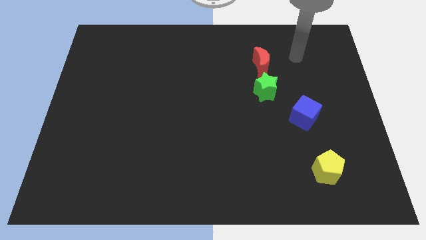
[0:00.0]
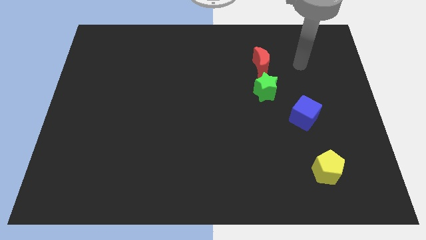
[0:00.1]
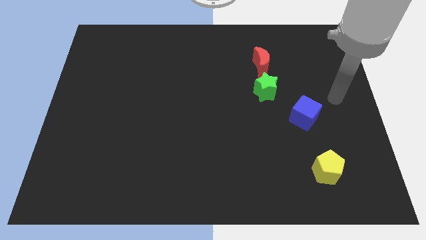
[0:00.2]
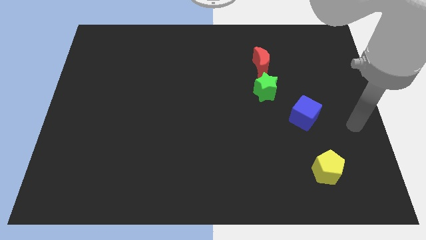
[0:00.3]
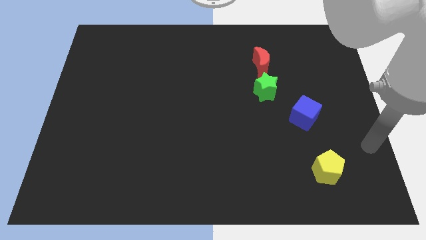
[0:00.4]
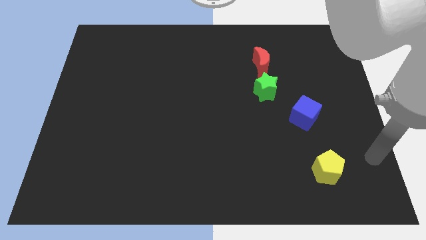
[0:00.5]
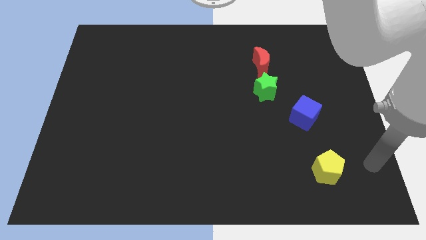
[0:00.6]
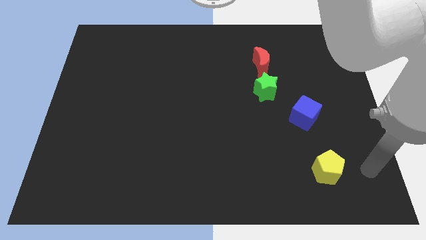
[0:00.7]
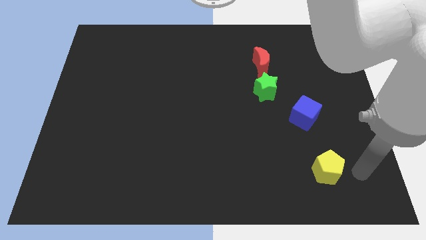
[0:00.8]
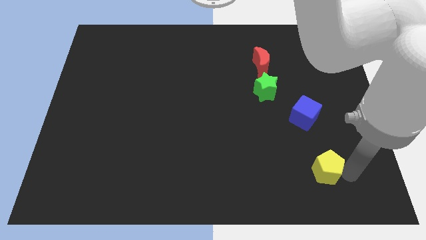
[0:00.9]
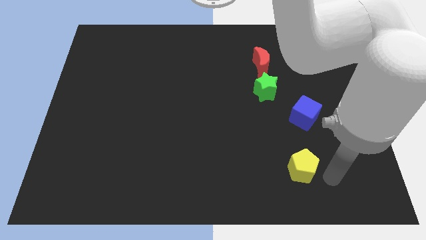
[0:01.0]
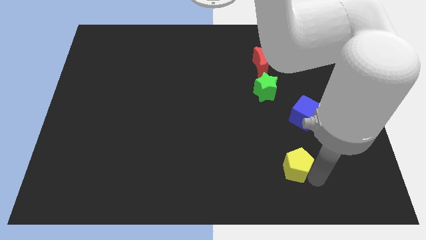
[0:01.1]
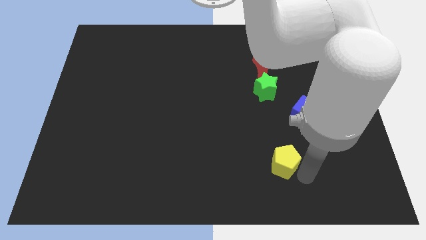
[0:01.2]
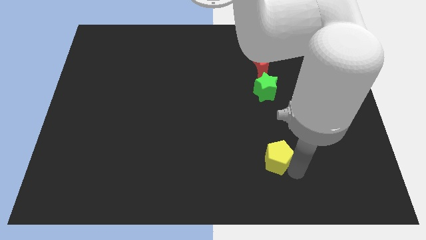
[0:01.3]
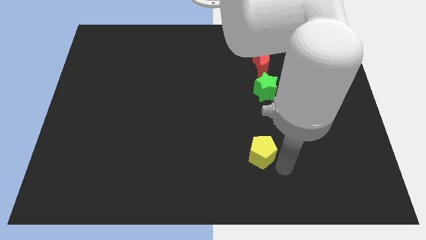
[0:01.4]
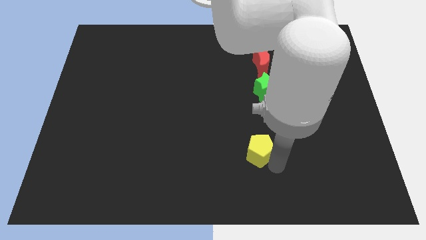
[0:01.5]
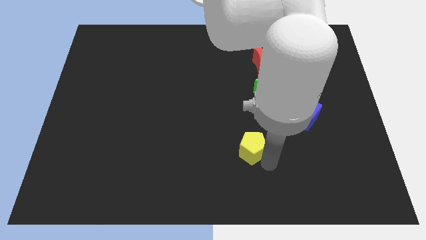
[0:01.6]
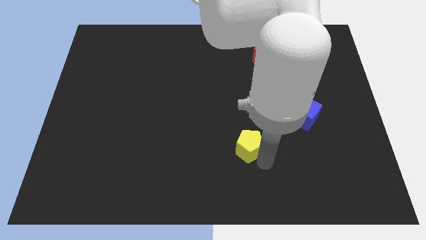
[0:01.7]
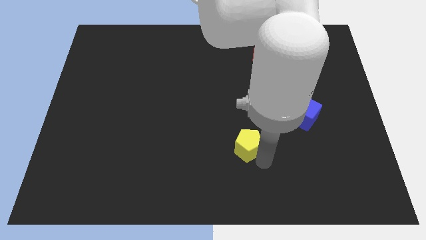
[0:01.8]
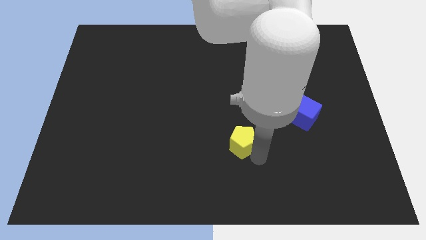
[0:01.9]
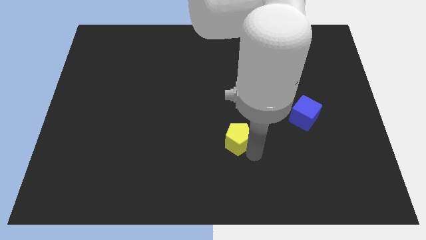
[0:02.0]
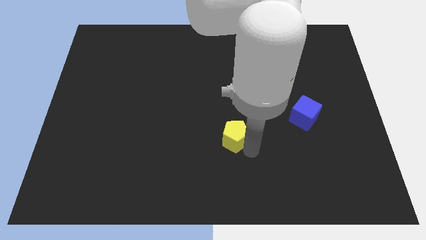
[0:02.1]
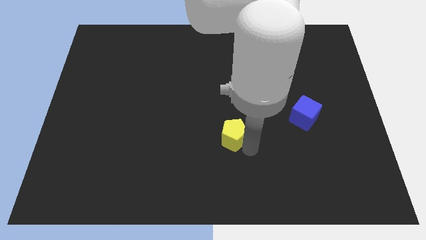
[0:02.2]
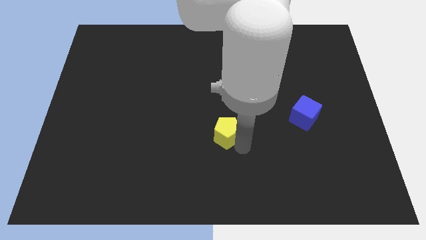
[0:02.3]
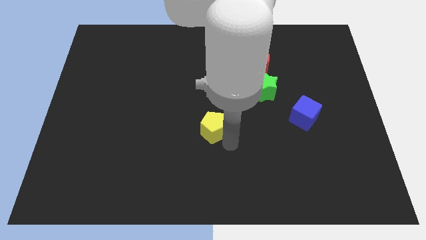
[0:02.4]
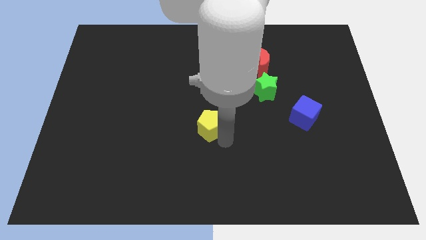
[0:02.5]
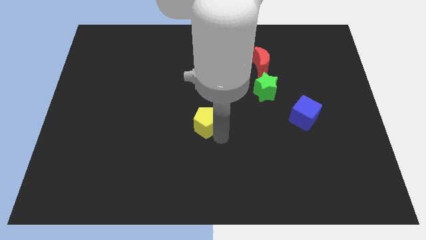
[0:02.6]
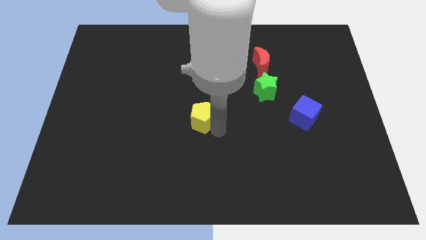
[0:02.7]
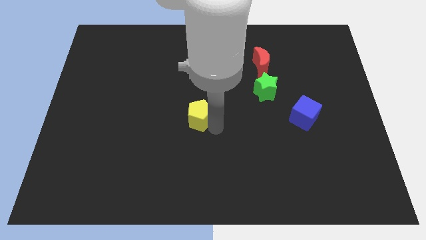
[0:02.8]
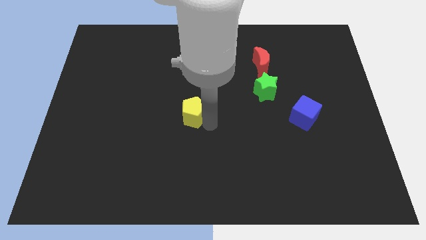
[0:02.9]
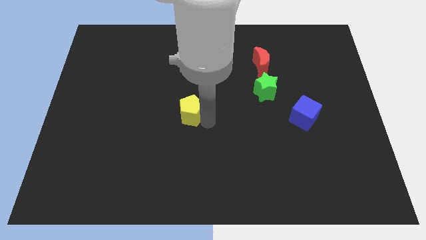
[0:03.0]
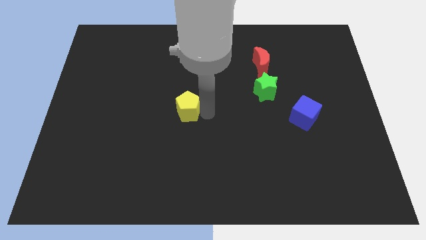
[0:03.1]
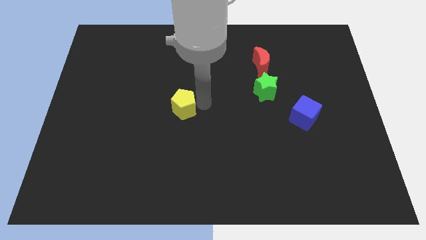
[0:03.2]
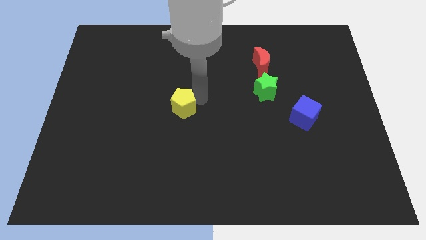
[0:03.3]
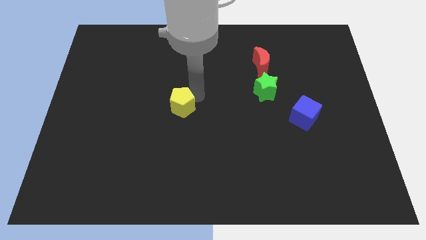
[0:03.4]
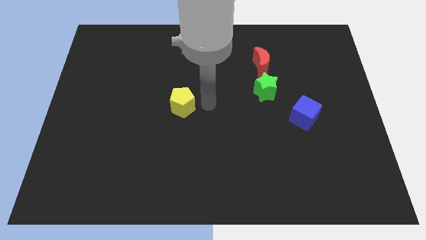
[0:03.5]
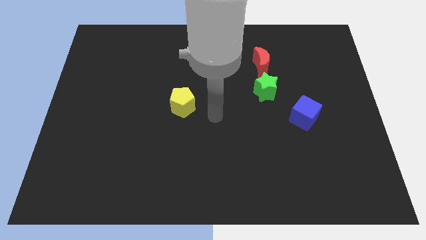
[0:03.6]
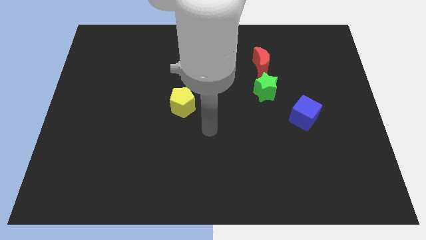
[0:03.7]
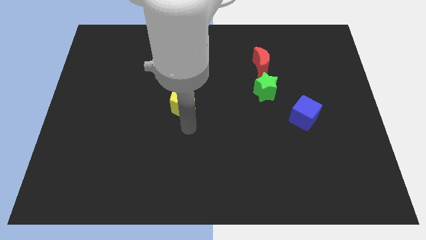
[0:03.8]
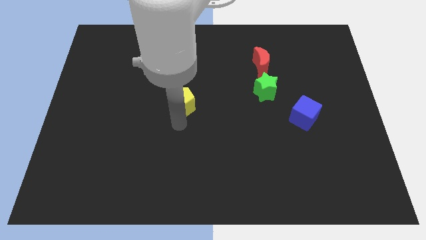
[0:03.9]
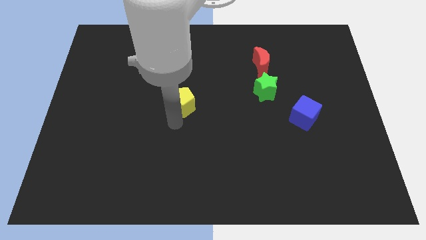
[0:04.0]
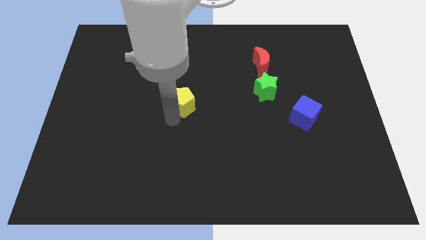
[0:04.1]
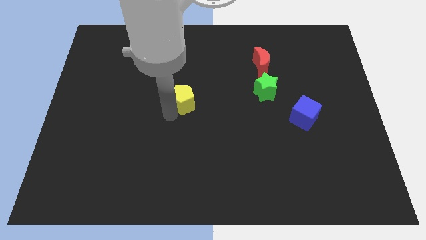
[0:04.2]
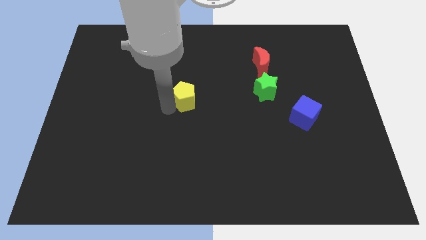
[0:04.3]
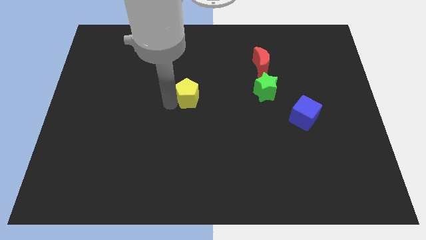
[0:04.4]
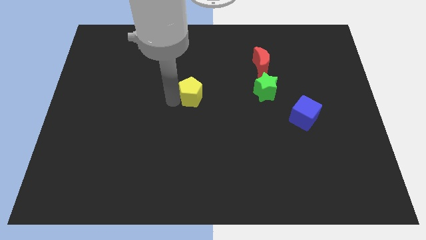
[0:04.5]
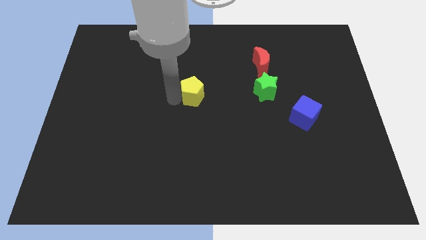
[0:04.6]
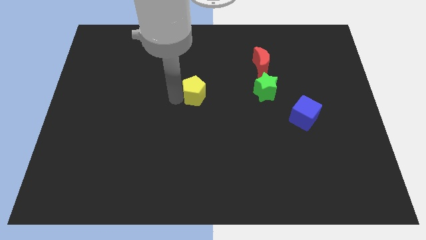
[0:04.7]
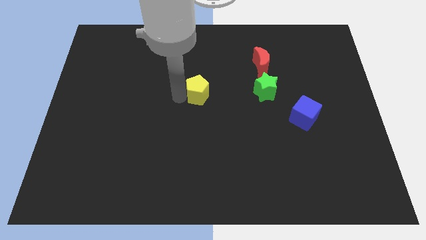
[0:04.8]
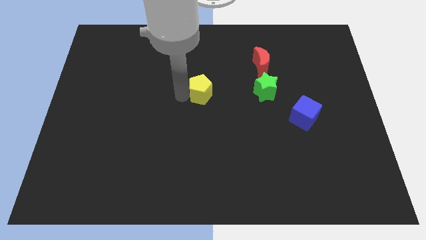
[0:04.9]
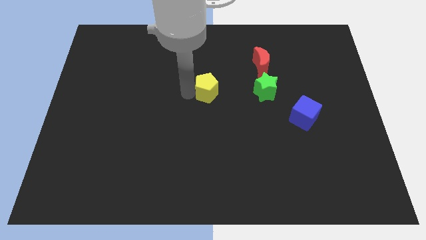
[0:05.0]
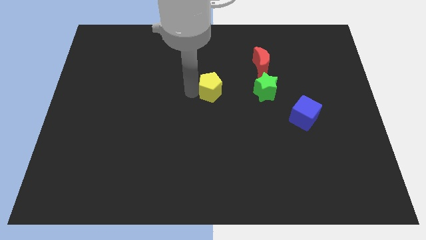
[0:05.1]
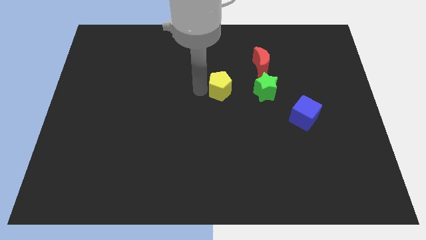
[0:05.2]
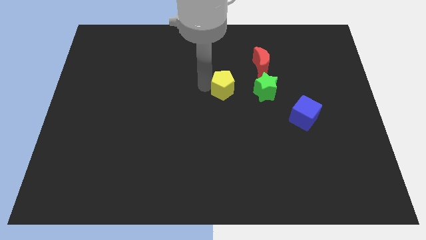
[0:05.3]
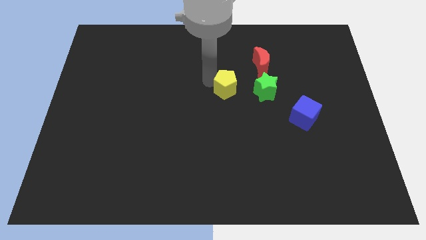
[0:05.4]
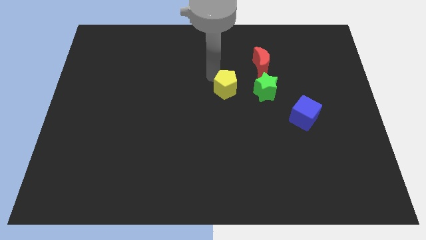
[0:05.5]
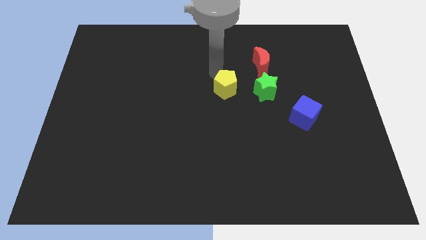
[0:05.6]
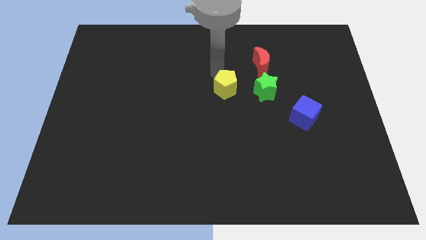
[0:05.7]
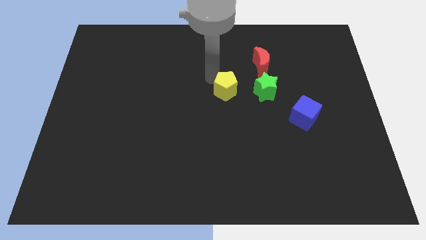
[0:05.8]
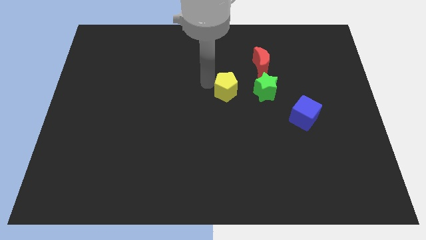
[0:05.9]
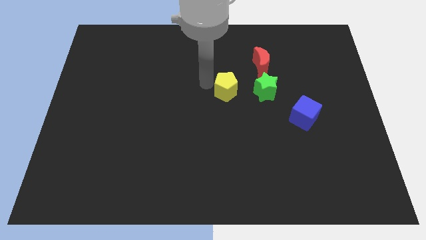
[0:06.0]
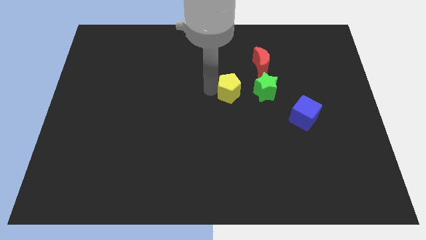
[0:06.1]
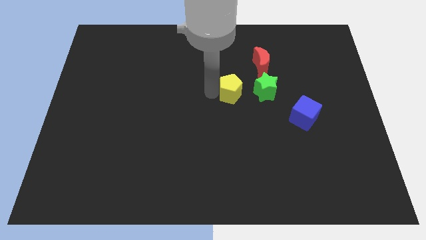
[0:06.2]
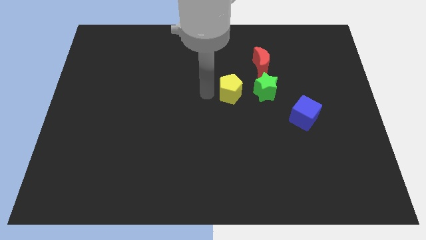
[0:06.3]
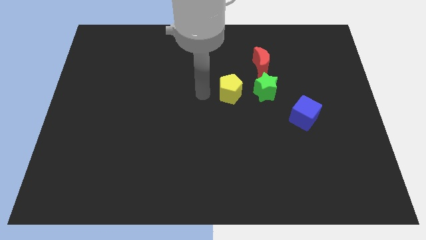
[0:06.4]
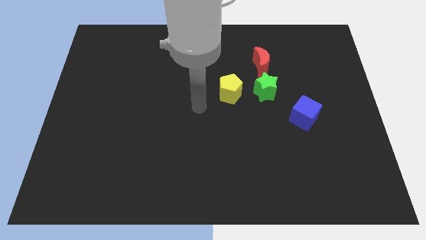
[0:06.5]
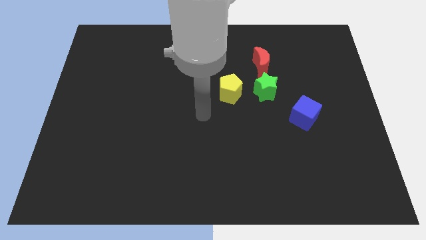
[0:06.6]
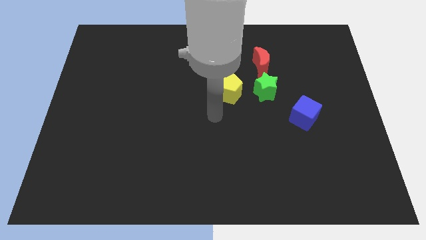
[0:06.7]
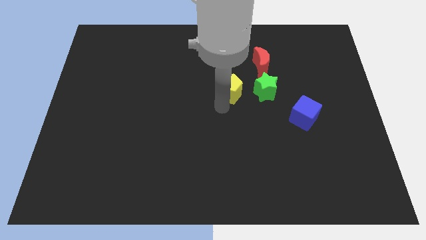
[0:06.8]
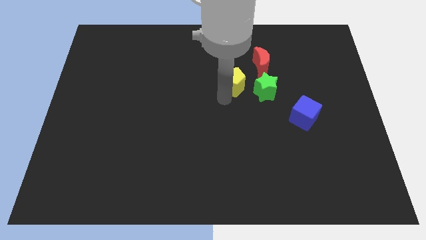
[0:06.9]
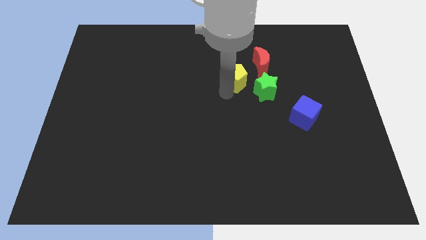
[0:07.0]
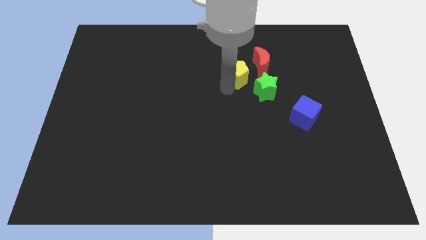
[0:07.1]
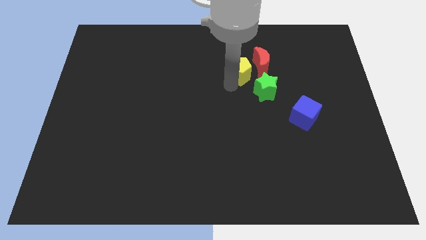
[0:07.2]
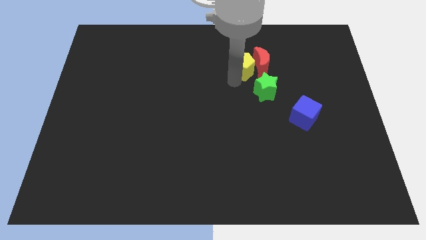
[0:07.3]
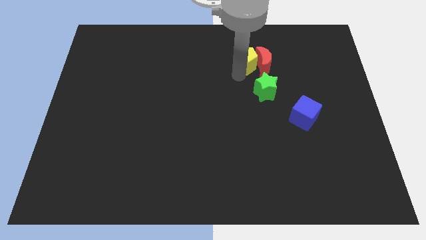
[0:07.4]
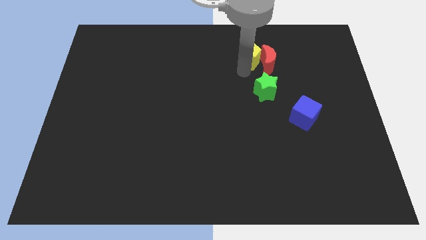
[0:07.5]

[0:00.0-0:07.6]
push the yellow block next to the red block

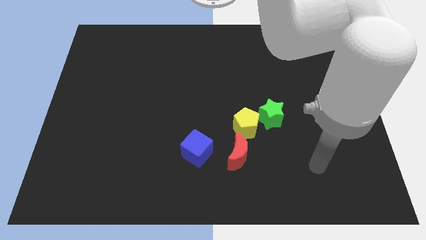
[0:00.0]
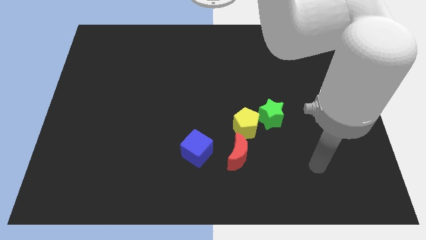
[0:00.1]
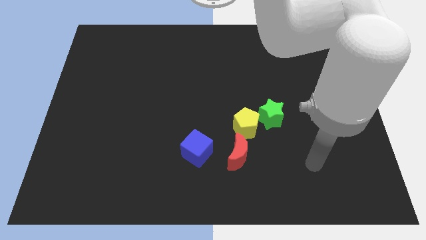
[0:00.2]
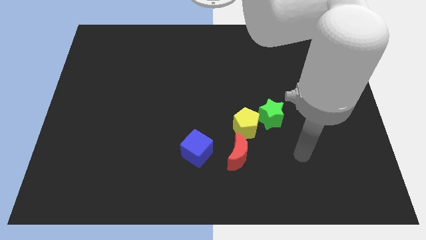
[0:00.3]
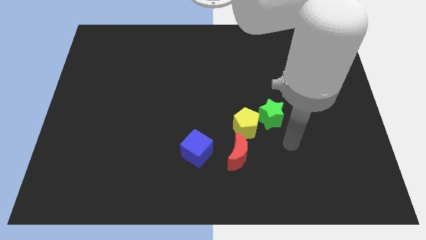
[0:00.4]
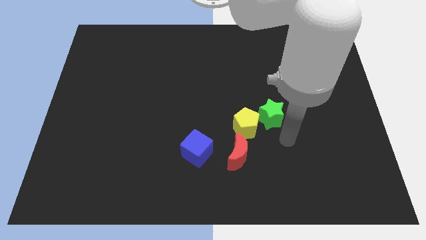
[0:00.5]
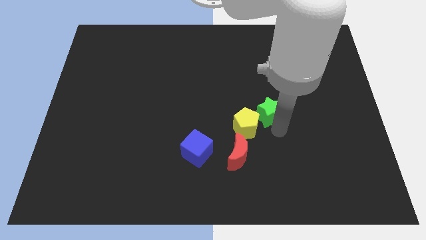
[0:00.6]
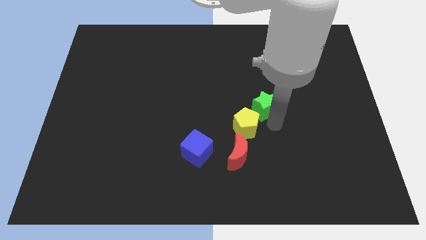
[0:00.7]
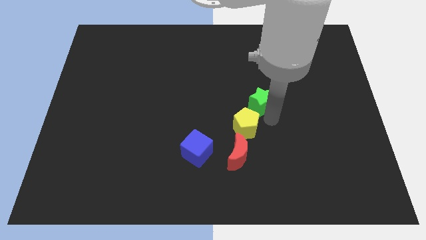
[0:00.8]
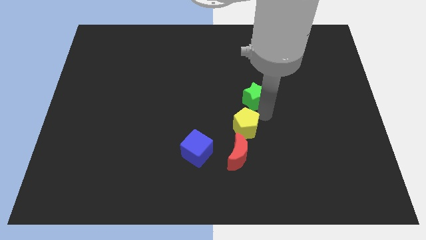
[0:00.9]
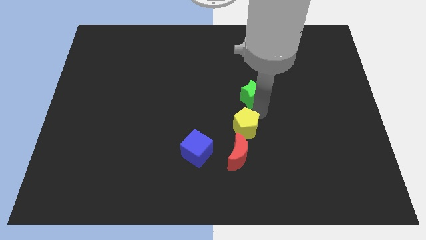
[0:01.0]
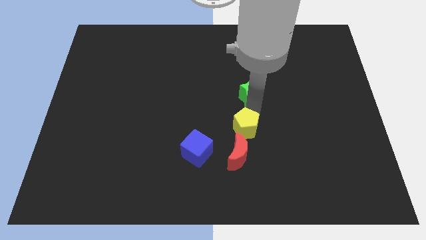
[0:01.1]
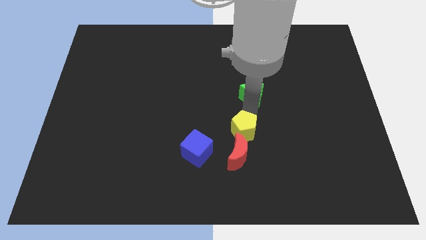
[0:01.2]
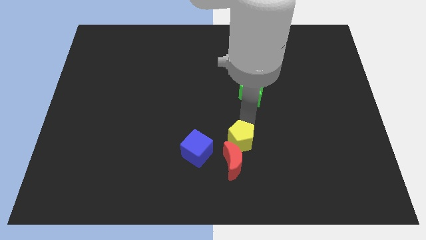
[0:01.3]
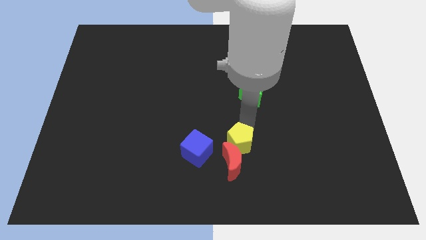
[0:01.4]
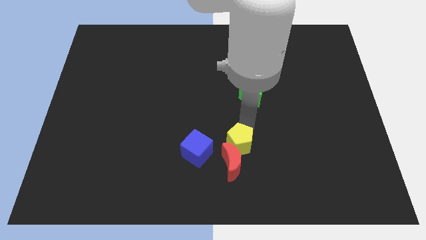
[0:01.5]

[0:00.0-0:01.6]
move the yellow pentagon to the moon
